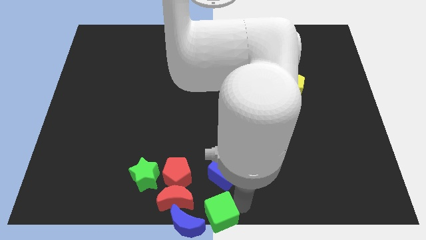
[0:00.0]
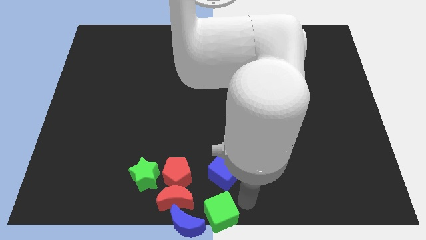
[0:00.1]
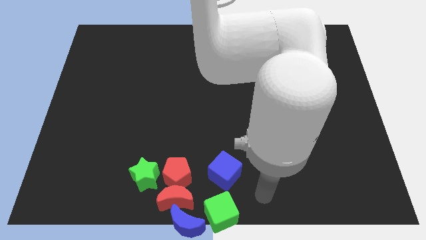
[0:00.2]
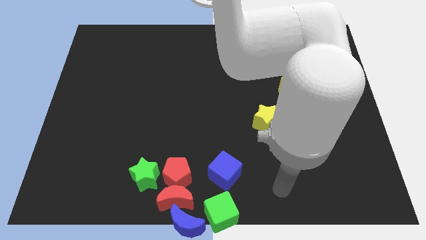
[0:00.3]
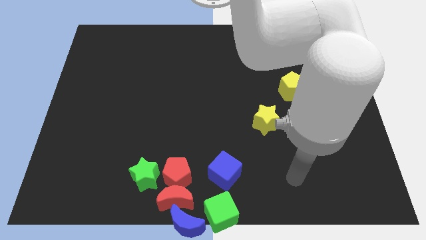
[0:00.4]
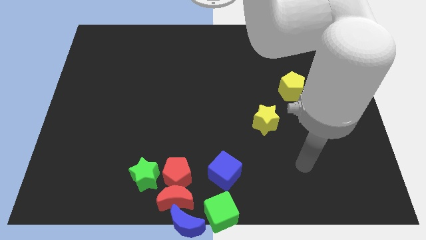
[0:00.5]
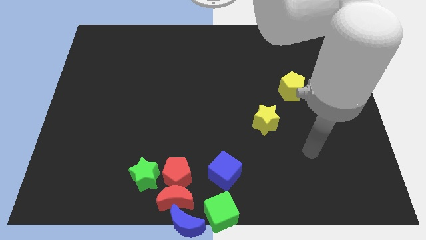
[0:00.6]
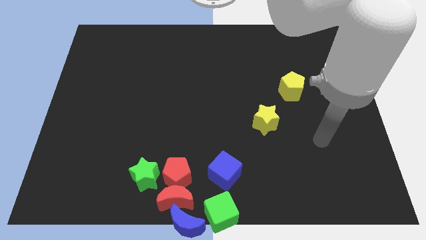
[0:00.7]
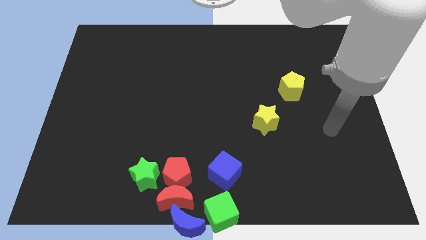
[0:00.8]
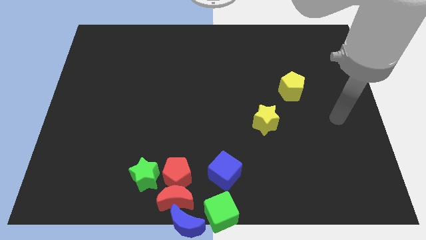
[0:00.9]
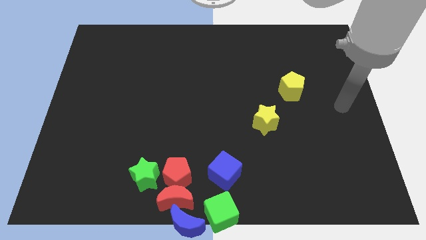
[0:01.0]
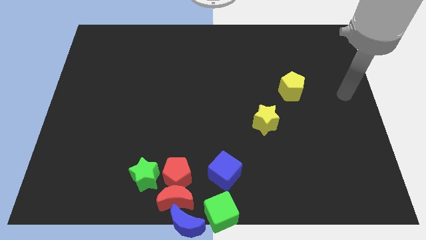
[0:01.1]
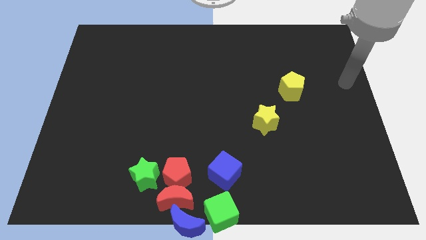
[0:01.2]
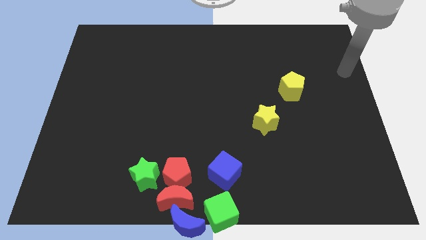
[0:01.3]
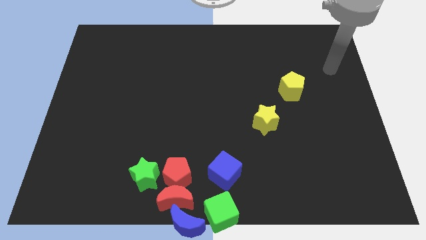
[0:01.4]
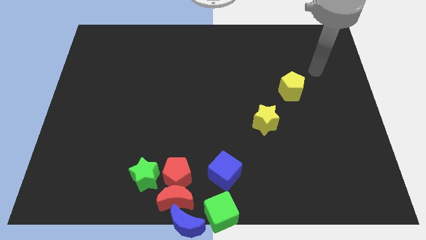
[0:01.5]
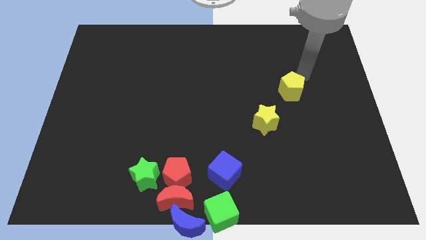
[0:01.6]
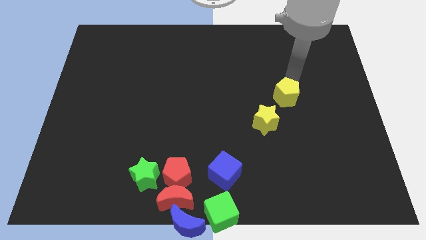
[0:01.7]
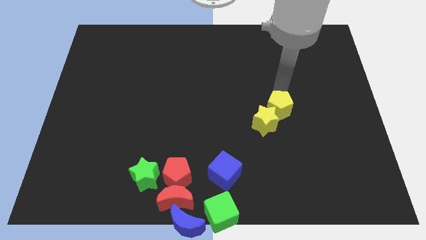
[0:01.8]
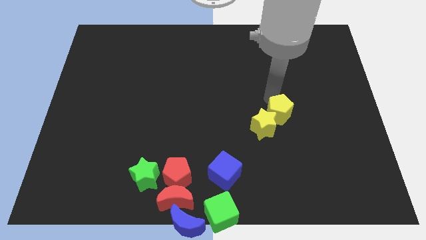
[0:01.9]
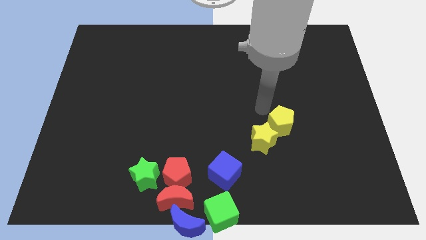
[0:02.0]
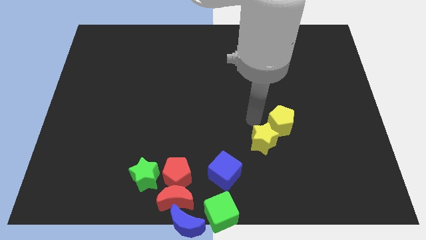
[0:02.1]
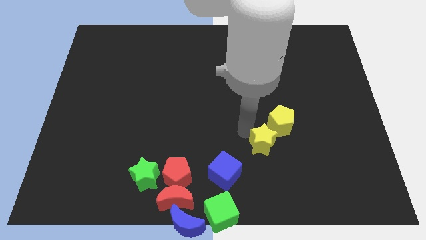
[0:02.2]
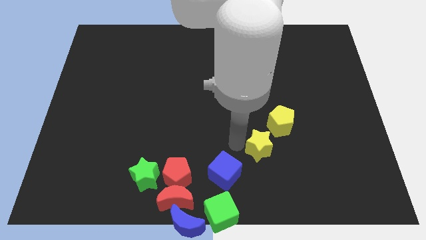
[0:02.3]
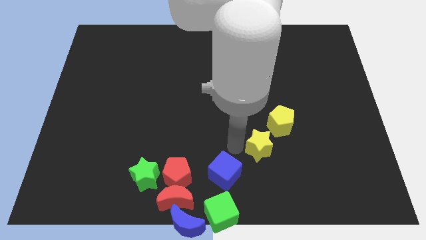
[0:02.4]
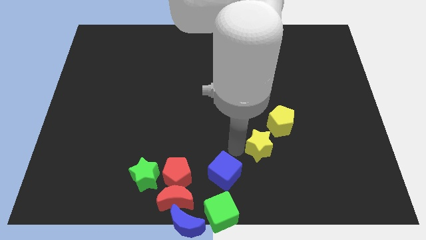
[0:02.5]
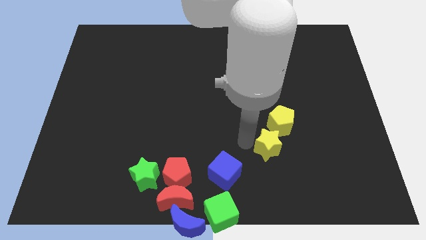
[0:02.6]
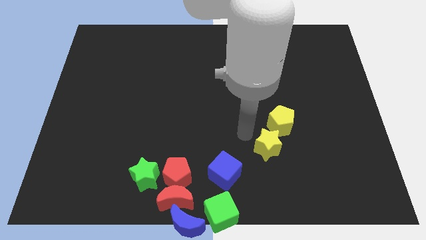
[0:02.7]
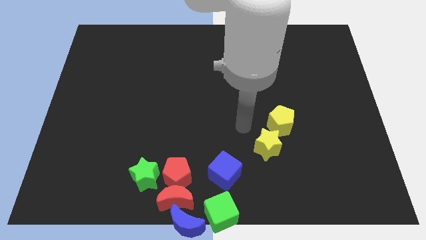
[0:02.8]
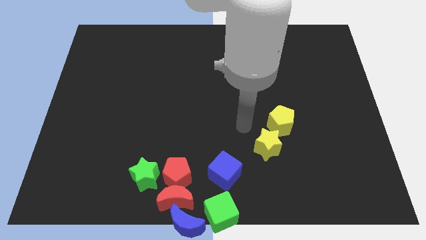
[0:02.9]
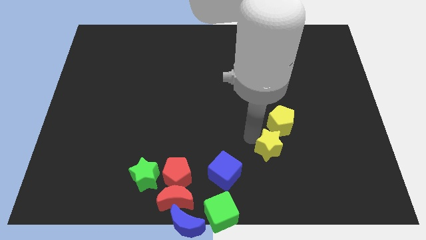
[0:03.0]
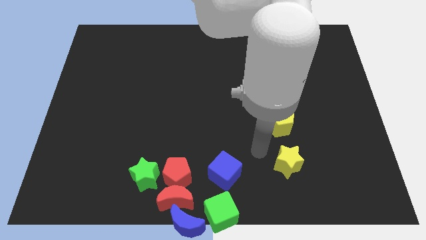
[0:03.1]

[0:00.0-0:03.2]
push the yellow star with yellow pentagon

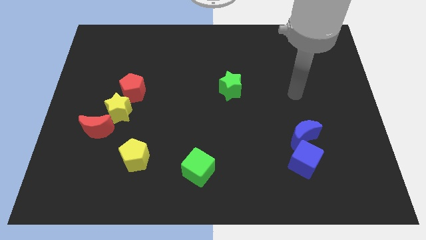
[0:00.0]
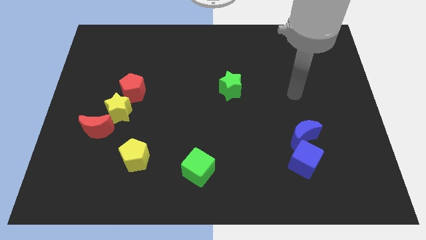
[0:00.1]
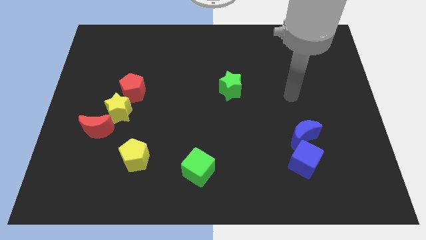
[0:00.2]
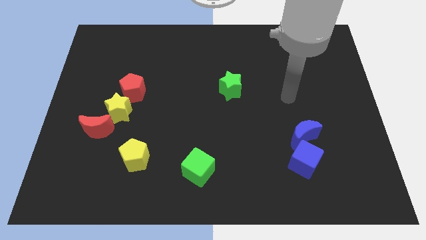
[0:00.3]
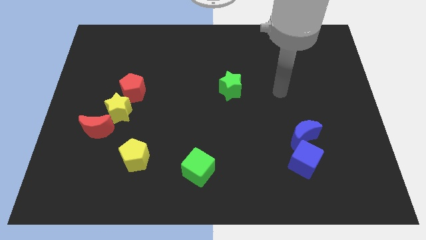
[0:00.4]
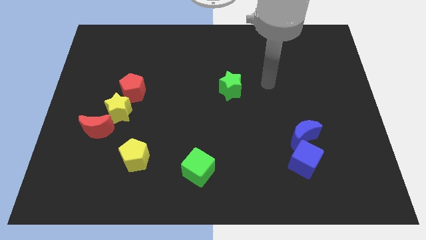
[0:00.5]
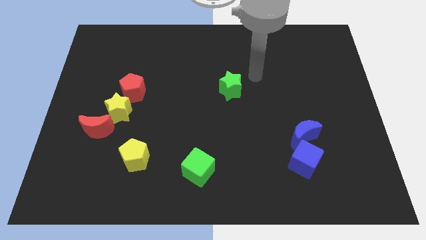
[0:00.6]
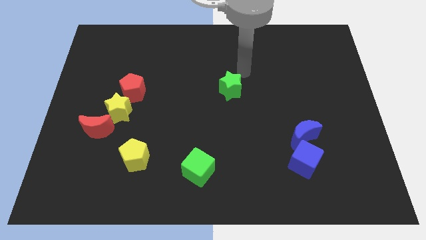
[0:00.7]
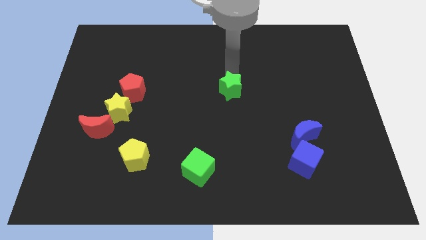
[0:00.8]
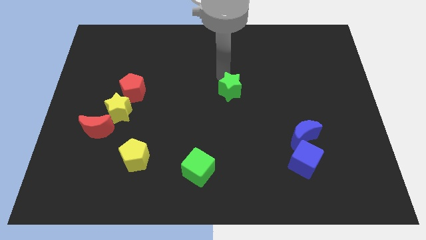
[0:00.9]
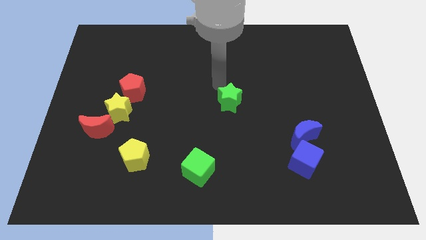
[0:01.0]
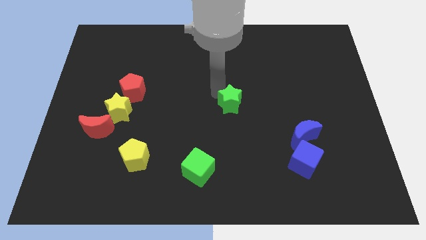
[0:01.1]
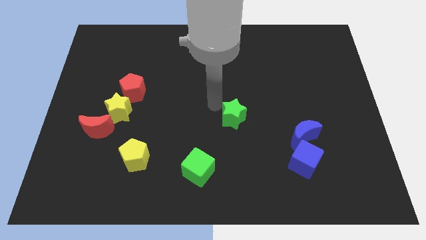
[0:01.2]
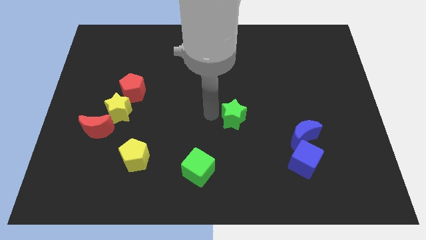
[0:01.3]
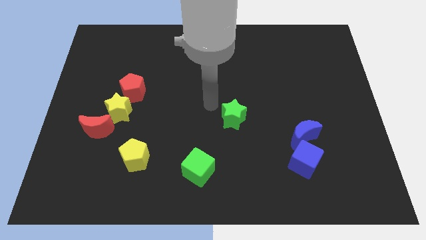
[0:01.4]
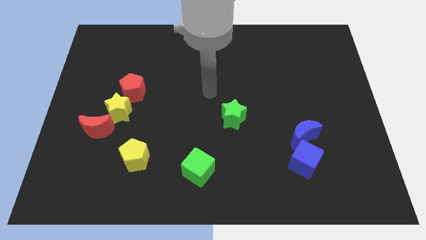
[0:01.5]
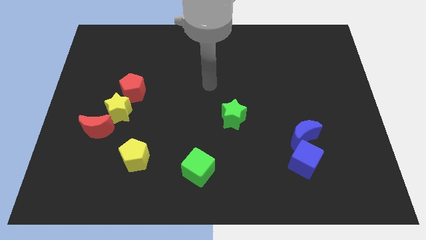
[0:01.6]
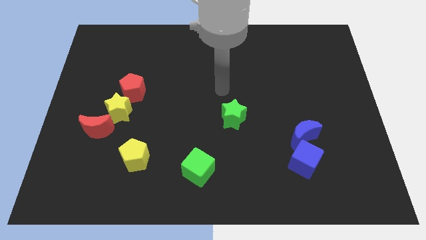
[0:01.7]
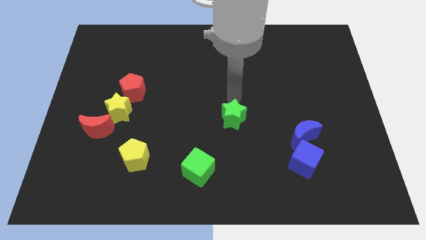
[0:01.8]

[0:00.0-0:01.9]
push green star towards bottom of the board

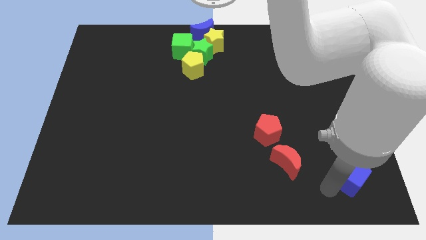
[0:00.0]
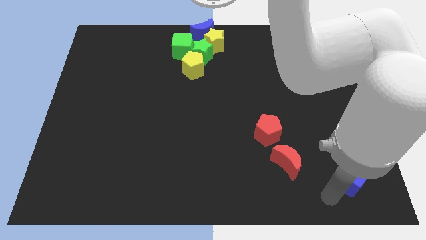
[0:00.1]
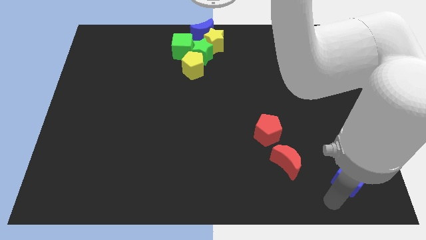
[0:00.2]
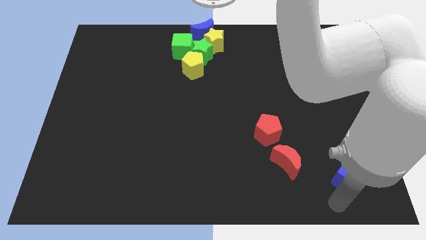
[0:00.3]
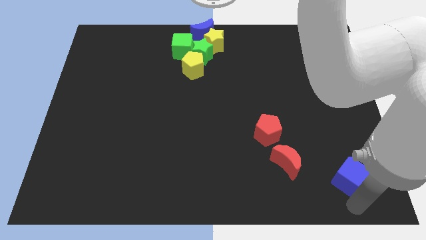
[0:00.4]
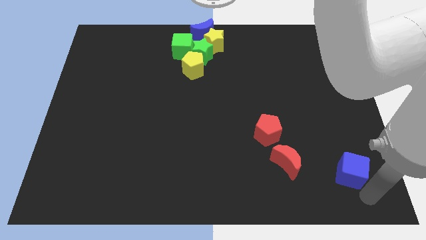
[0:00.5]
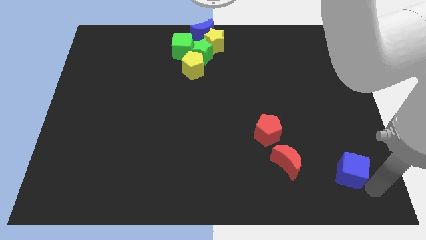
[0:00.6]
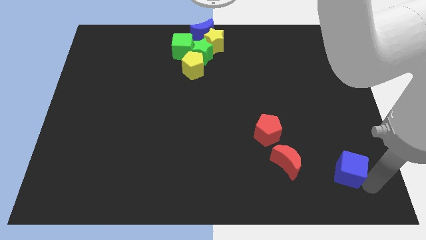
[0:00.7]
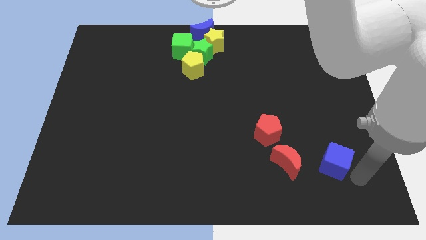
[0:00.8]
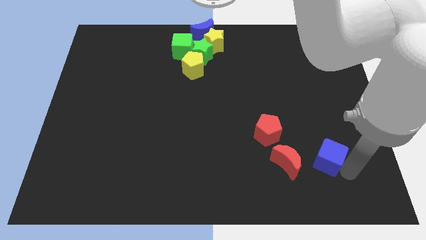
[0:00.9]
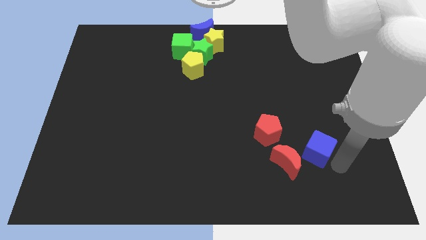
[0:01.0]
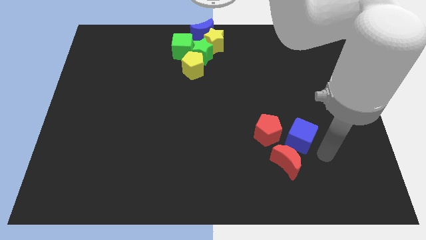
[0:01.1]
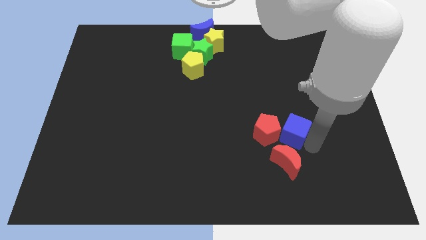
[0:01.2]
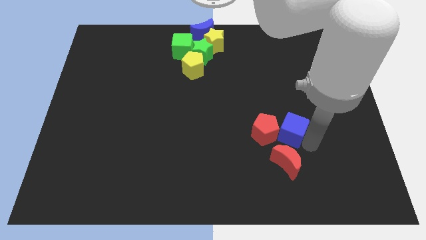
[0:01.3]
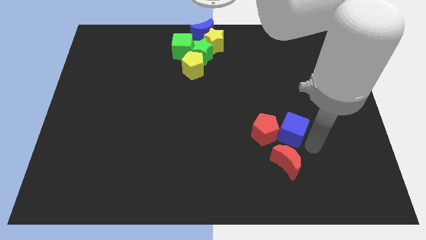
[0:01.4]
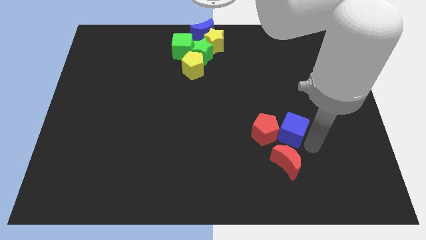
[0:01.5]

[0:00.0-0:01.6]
push the blue cube into red pentagon

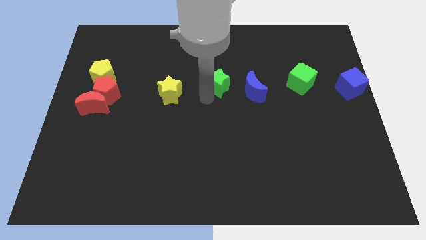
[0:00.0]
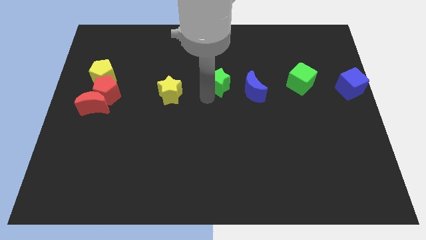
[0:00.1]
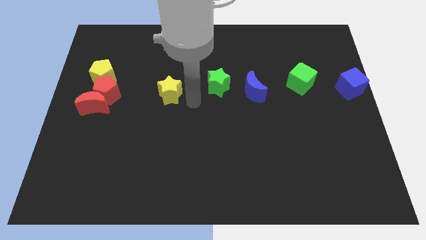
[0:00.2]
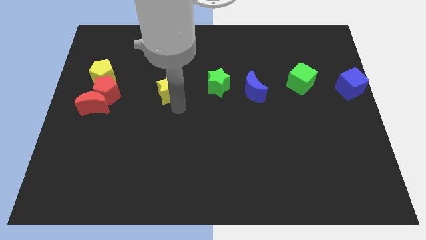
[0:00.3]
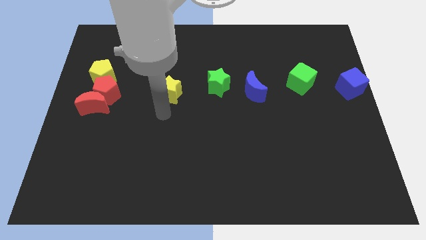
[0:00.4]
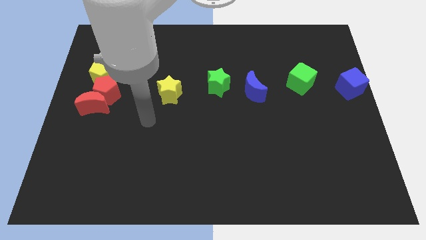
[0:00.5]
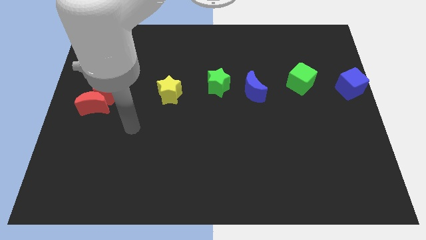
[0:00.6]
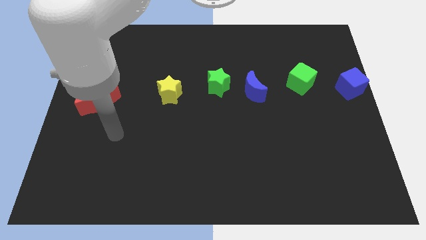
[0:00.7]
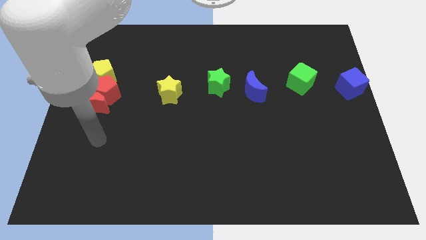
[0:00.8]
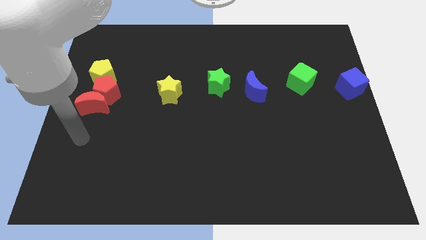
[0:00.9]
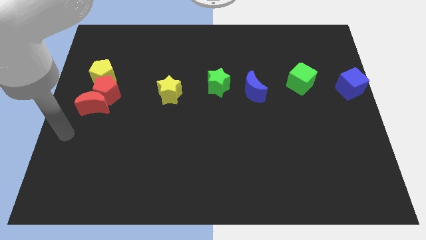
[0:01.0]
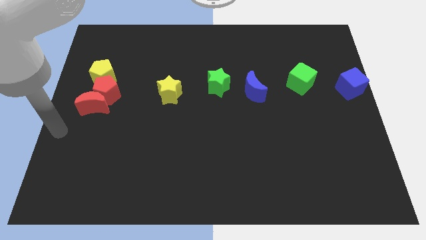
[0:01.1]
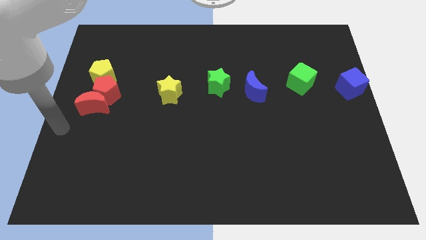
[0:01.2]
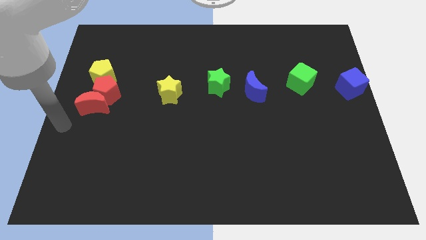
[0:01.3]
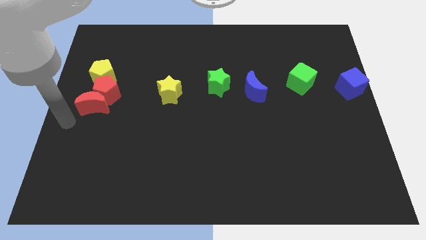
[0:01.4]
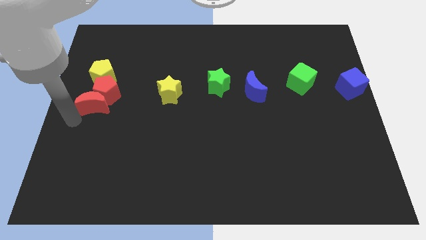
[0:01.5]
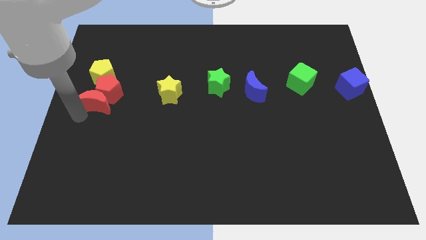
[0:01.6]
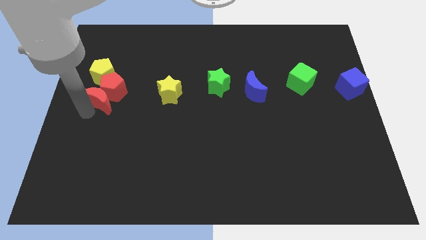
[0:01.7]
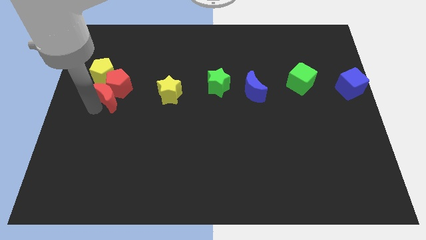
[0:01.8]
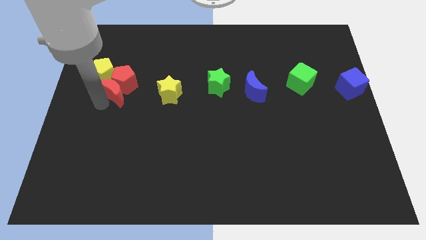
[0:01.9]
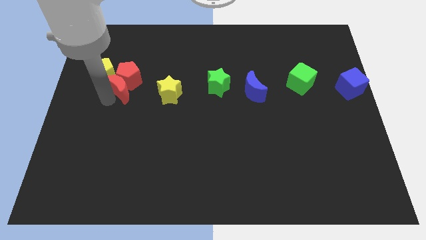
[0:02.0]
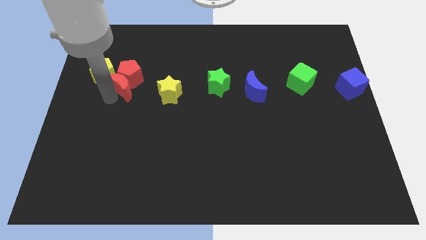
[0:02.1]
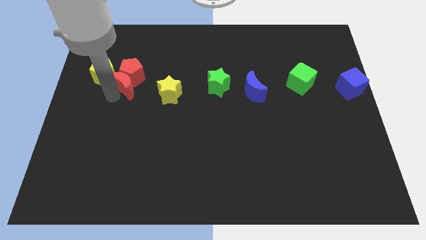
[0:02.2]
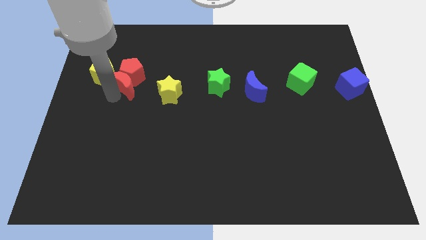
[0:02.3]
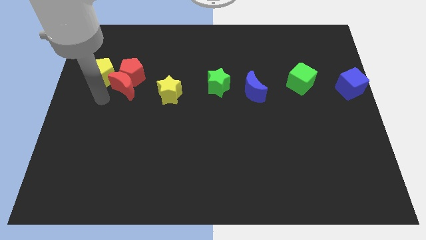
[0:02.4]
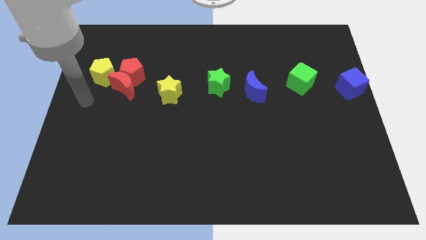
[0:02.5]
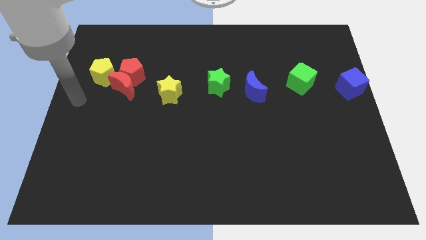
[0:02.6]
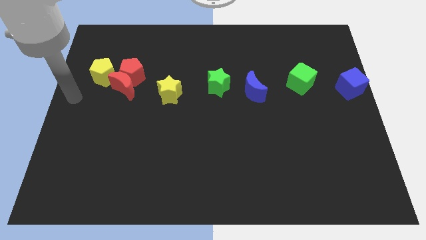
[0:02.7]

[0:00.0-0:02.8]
push the red moon into the red pentagon
